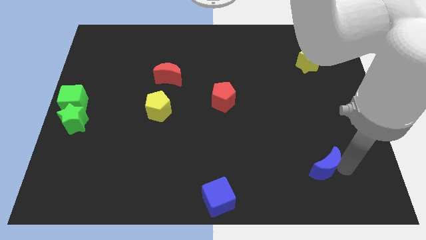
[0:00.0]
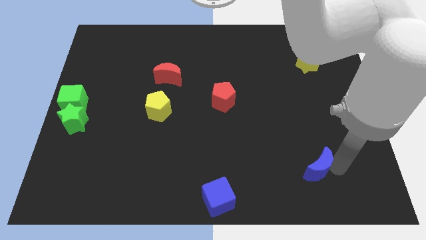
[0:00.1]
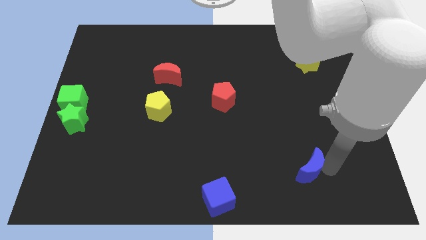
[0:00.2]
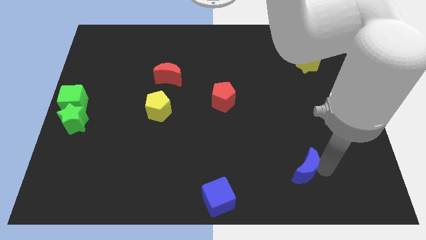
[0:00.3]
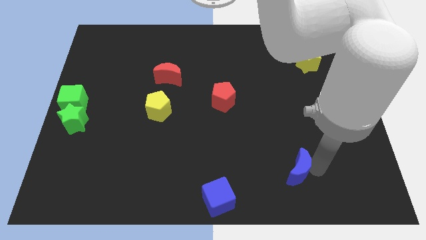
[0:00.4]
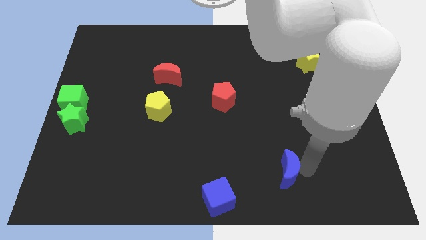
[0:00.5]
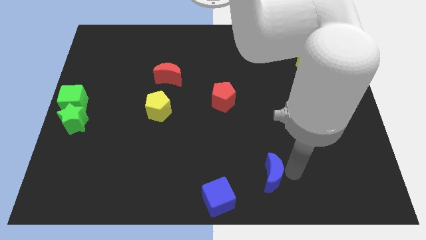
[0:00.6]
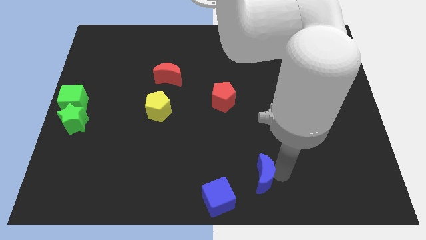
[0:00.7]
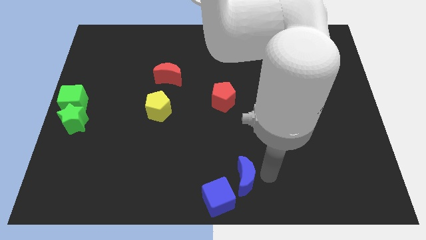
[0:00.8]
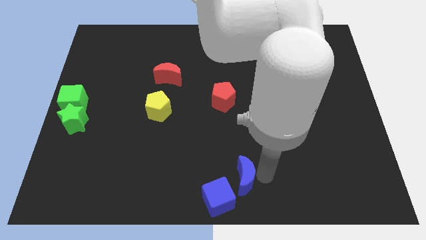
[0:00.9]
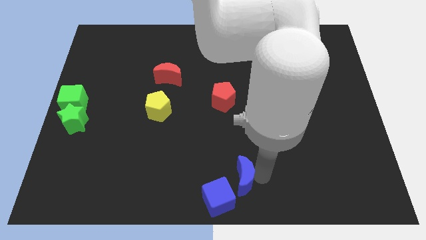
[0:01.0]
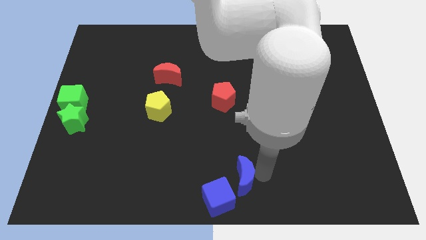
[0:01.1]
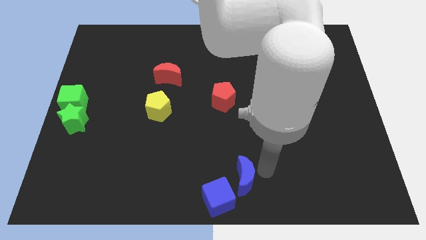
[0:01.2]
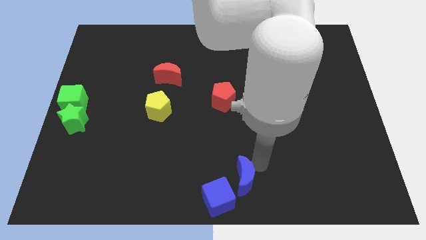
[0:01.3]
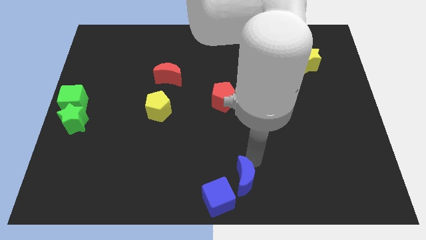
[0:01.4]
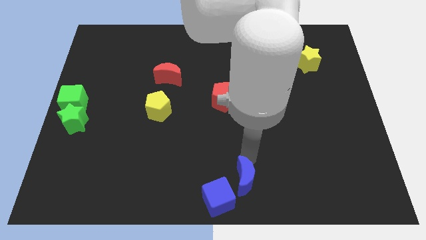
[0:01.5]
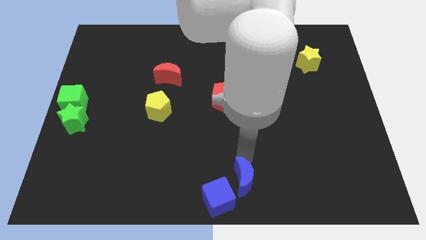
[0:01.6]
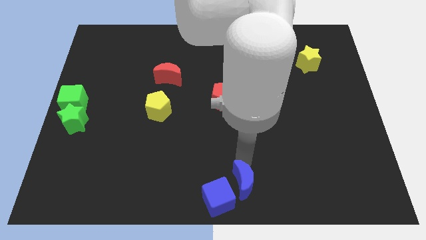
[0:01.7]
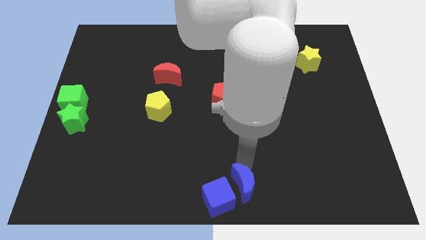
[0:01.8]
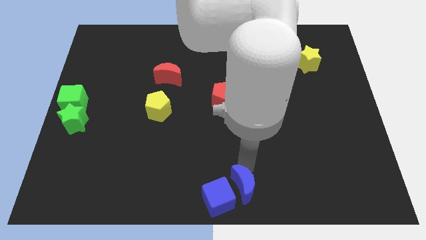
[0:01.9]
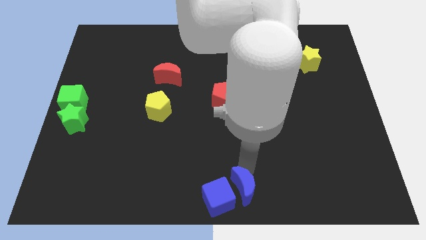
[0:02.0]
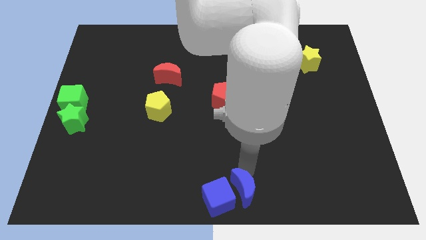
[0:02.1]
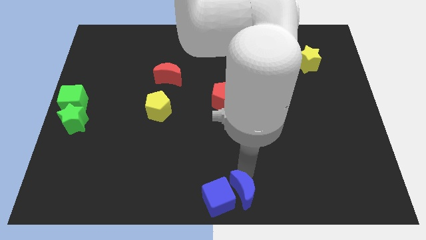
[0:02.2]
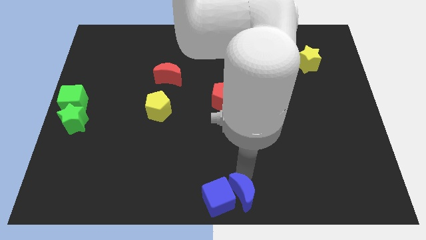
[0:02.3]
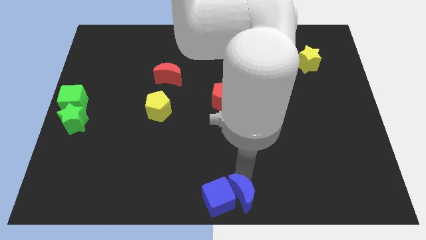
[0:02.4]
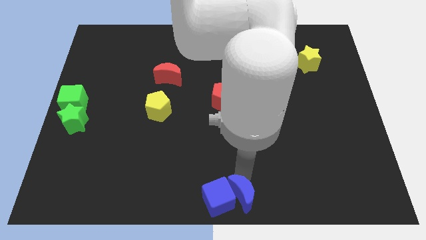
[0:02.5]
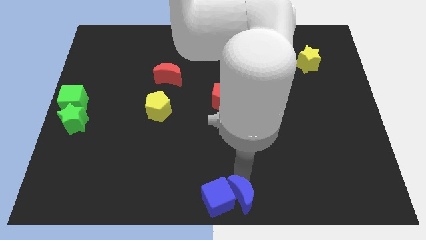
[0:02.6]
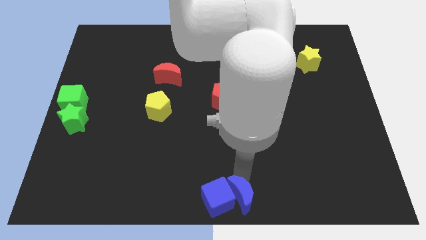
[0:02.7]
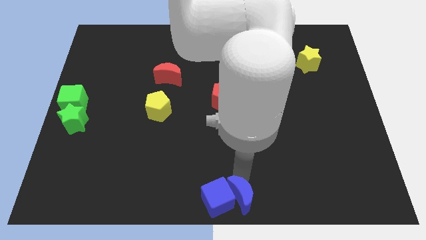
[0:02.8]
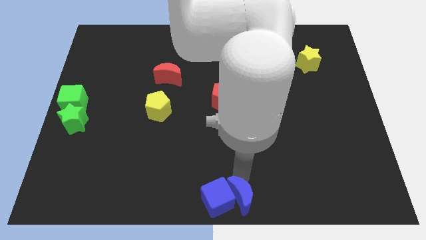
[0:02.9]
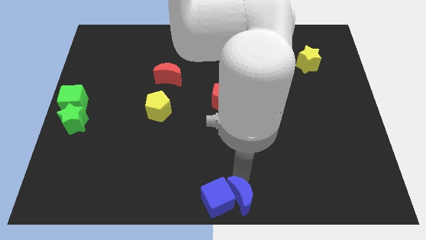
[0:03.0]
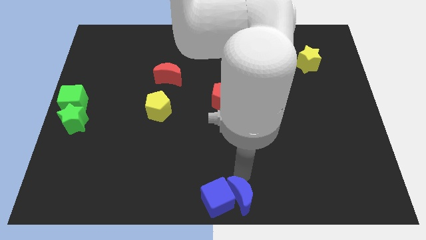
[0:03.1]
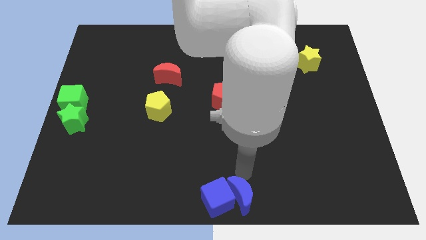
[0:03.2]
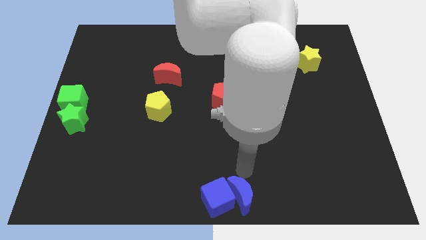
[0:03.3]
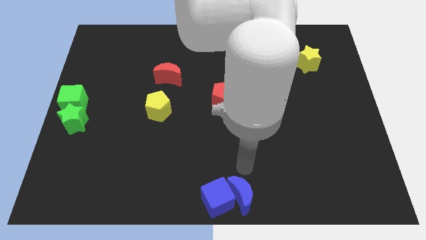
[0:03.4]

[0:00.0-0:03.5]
place blue crescent on the right side of the blue cube

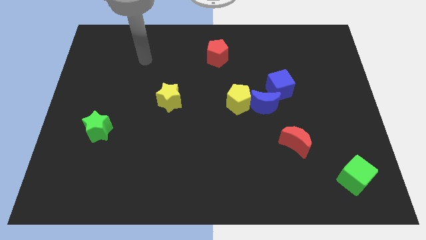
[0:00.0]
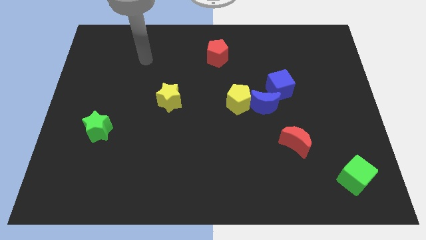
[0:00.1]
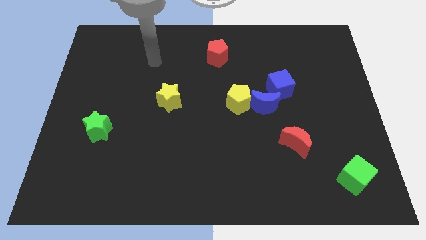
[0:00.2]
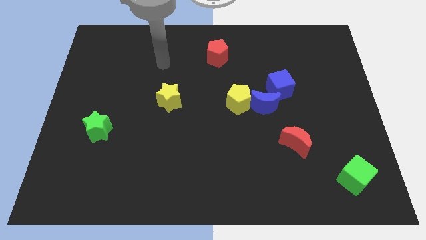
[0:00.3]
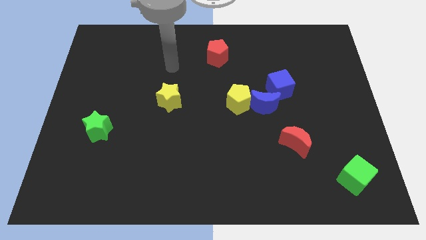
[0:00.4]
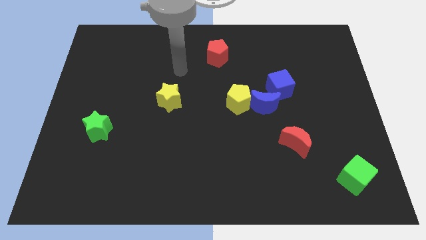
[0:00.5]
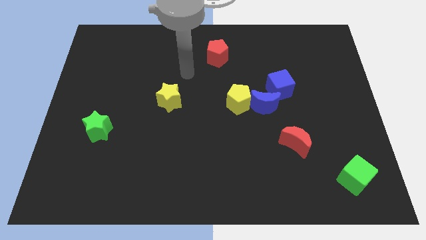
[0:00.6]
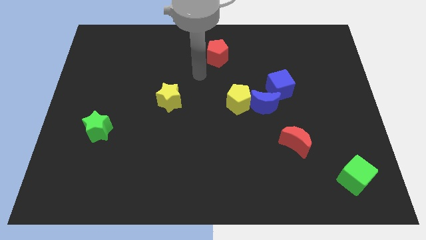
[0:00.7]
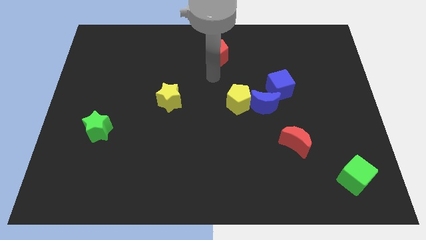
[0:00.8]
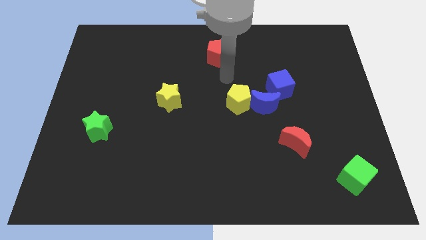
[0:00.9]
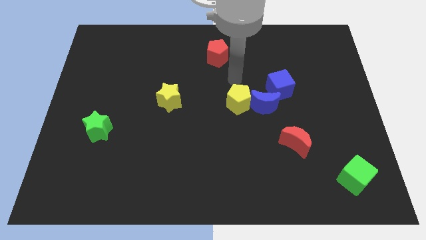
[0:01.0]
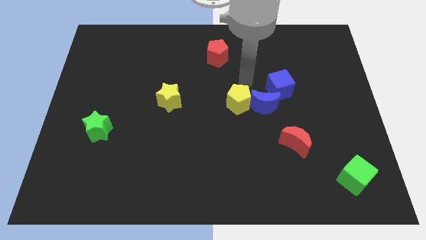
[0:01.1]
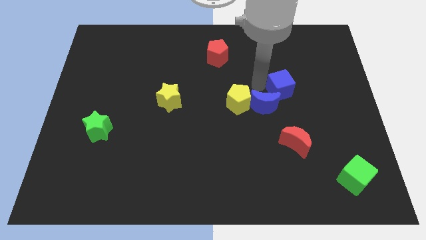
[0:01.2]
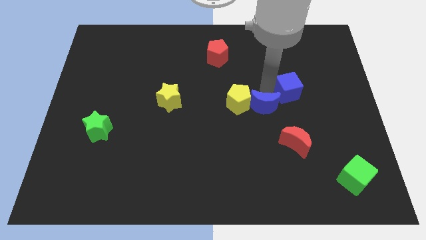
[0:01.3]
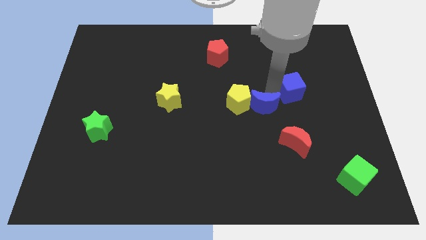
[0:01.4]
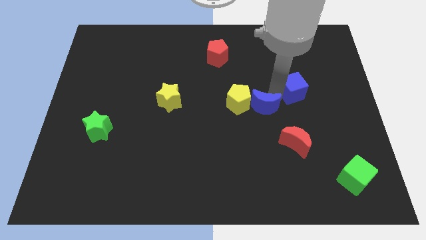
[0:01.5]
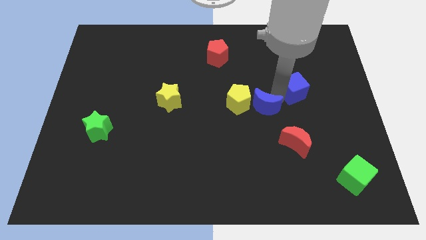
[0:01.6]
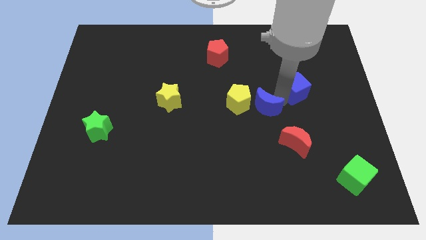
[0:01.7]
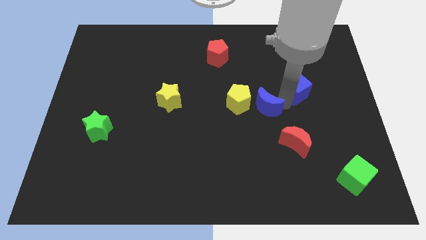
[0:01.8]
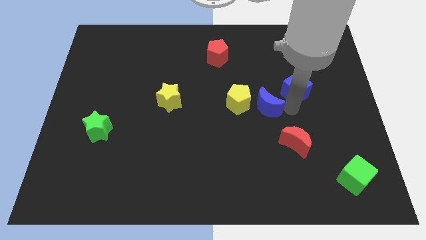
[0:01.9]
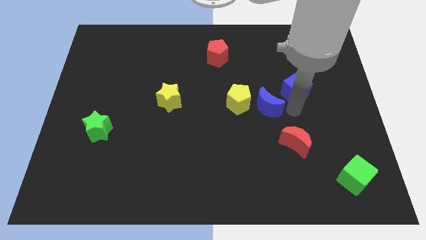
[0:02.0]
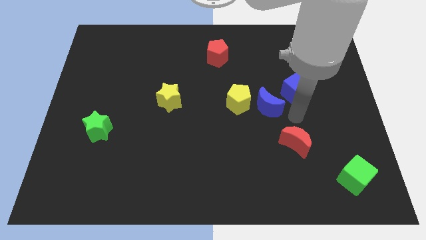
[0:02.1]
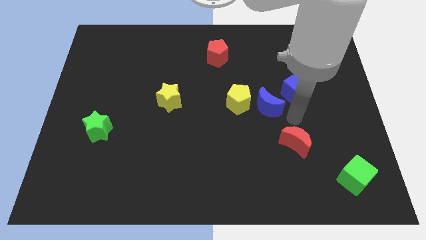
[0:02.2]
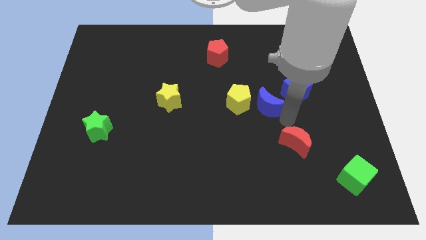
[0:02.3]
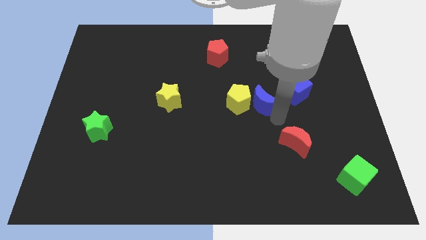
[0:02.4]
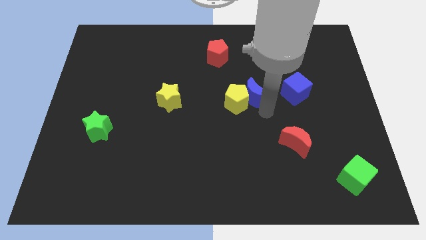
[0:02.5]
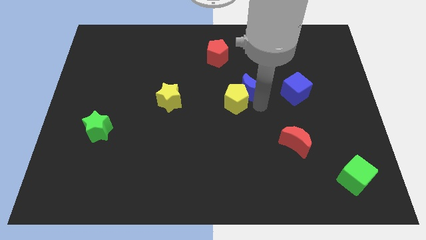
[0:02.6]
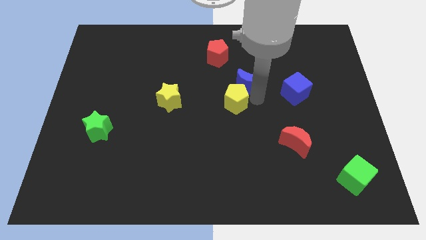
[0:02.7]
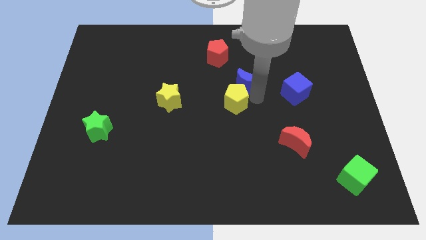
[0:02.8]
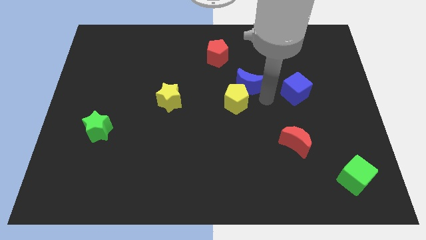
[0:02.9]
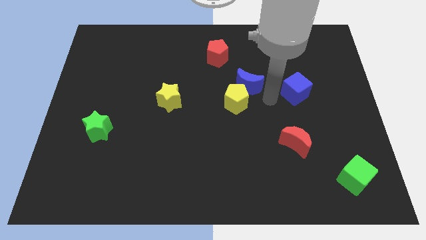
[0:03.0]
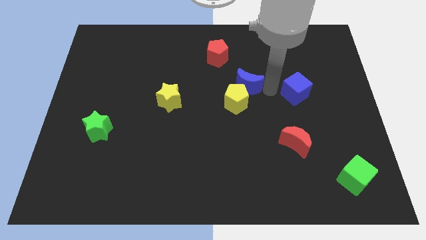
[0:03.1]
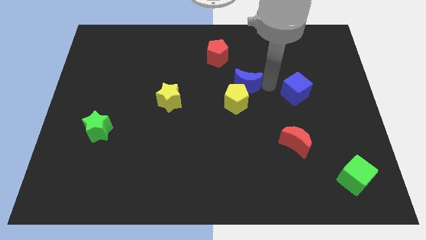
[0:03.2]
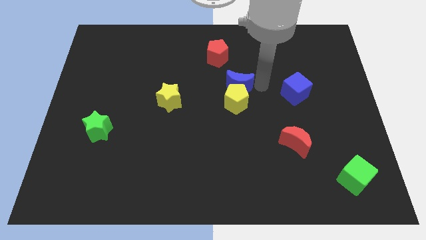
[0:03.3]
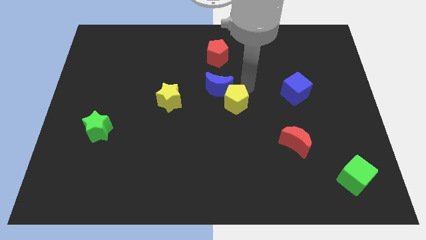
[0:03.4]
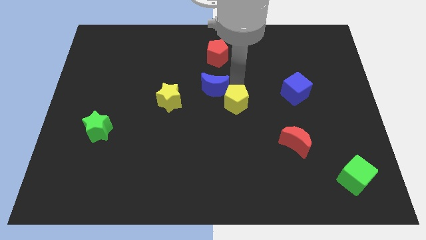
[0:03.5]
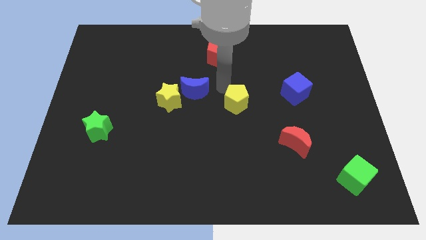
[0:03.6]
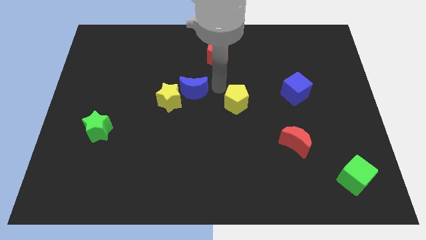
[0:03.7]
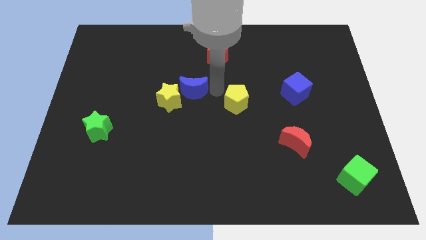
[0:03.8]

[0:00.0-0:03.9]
push the blue crescent diagonally to the yellow star

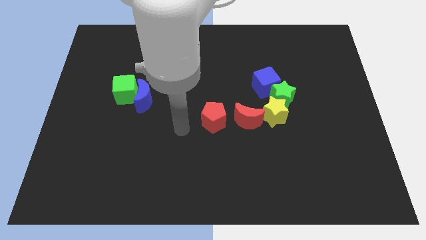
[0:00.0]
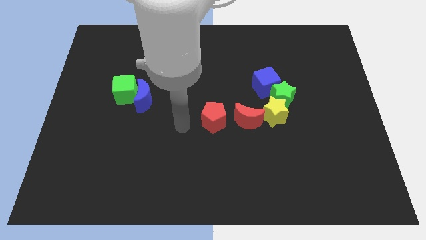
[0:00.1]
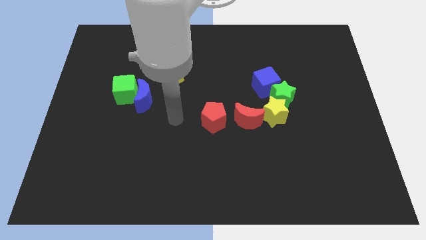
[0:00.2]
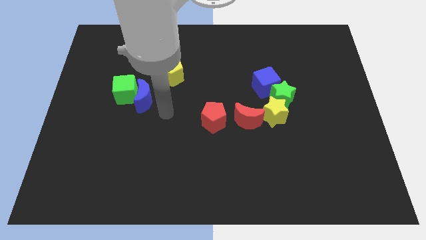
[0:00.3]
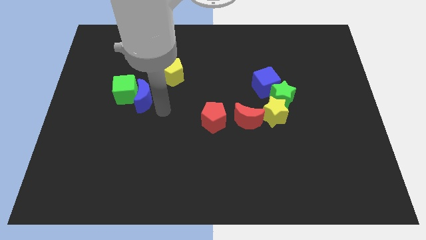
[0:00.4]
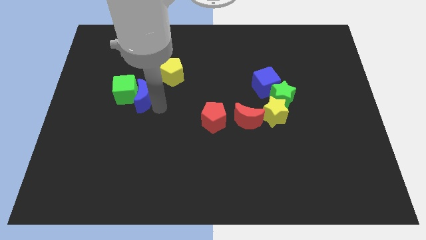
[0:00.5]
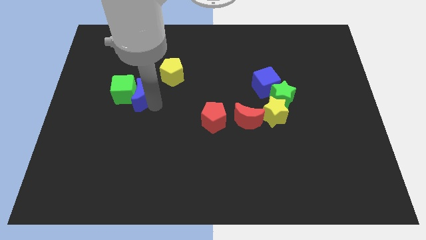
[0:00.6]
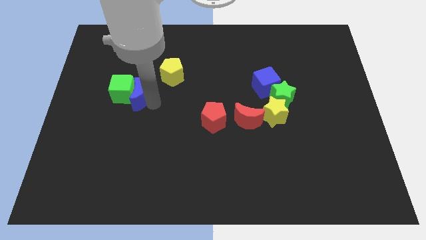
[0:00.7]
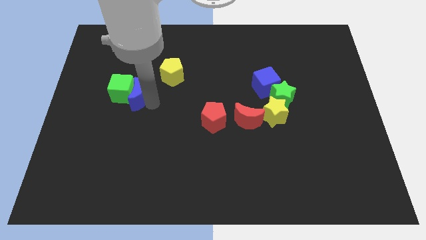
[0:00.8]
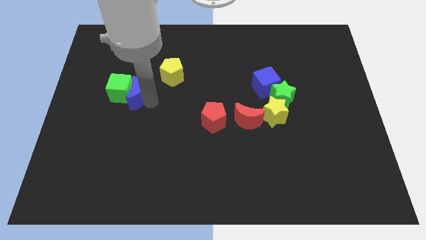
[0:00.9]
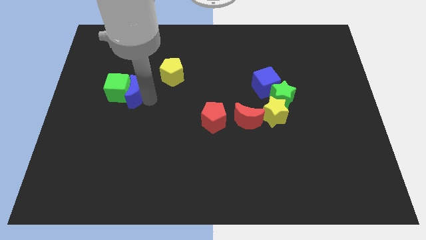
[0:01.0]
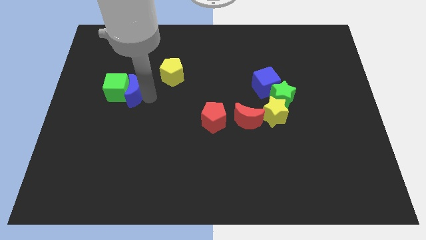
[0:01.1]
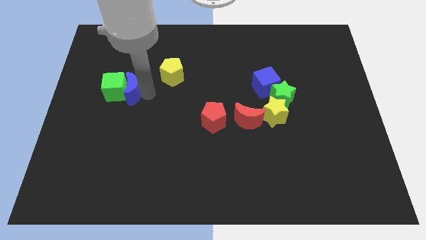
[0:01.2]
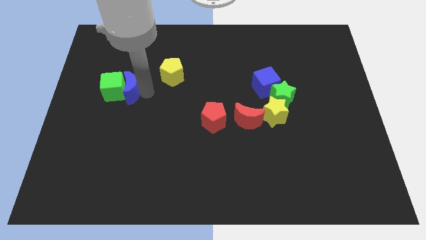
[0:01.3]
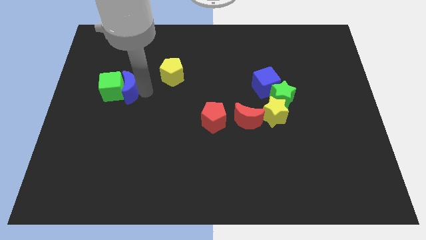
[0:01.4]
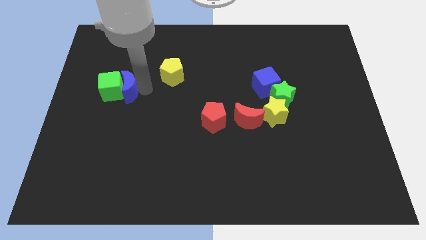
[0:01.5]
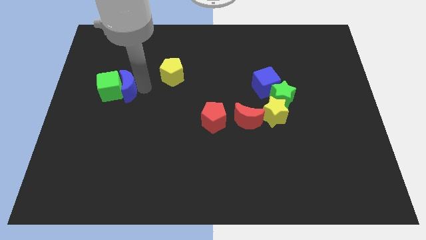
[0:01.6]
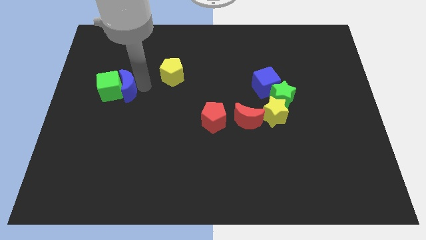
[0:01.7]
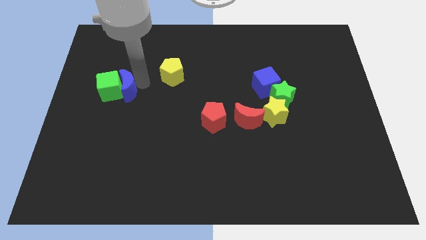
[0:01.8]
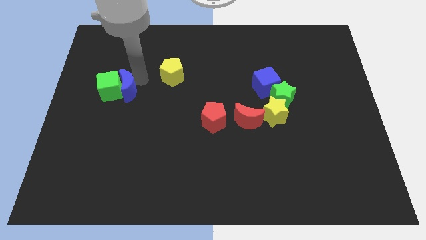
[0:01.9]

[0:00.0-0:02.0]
move the green cube and blue moon slightly to the left
